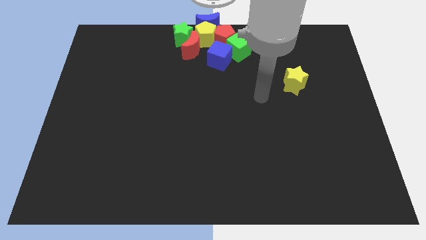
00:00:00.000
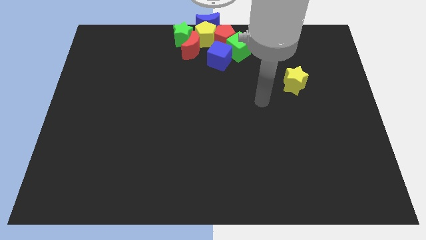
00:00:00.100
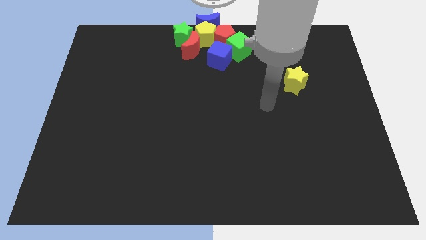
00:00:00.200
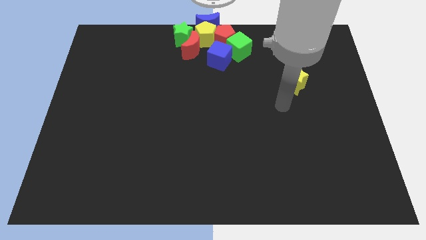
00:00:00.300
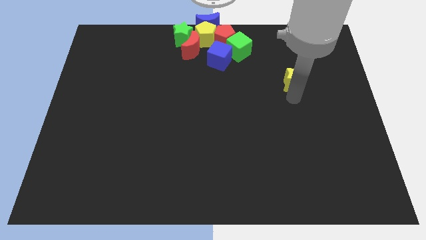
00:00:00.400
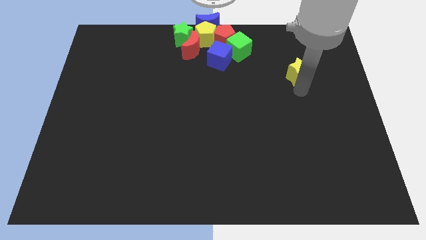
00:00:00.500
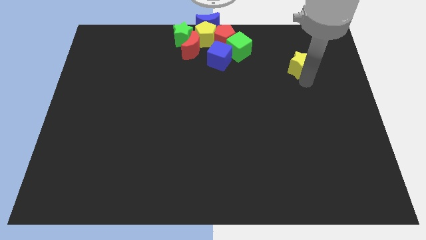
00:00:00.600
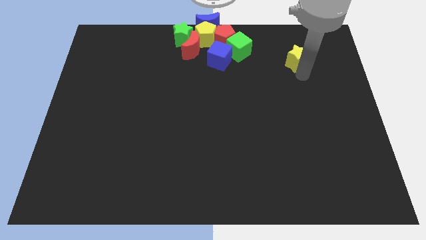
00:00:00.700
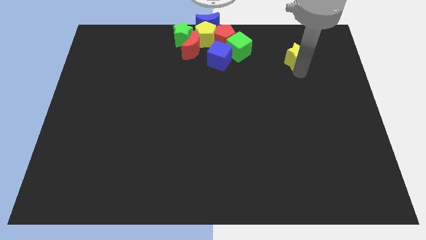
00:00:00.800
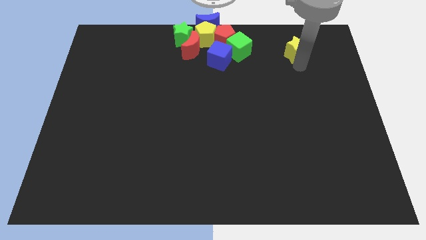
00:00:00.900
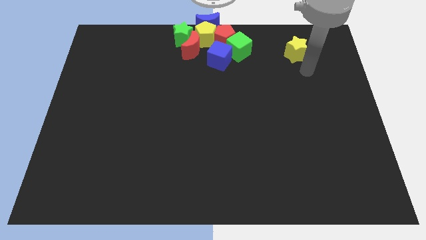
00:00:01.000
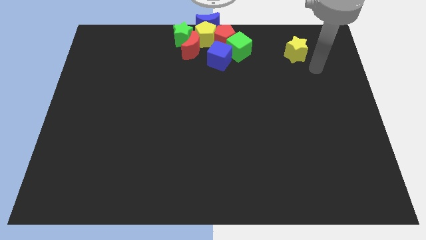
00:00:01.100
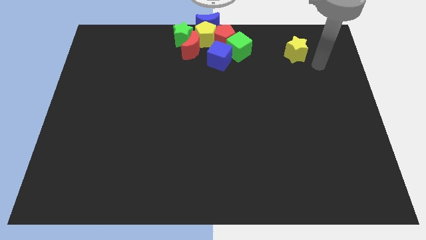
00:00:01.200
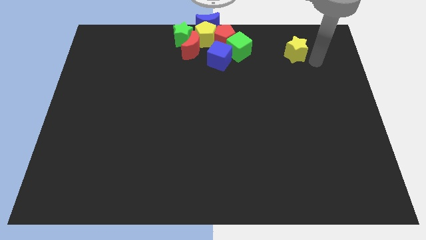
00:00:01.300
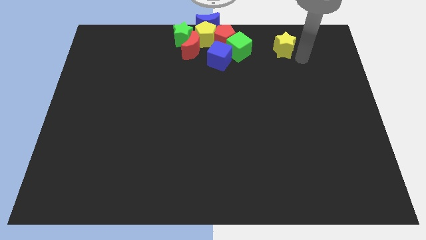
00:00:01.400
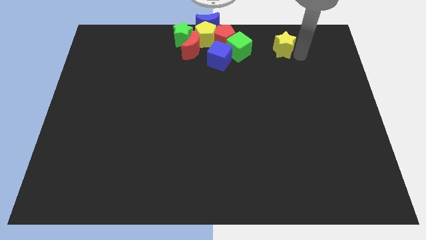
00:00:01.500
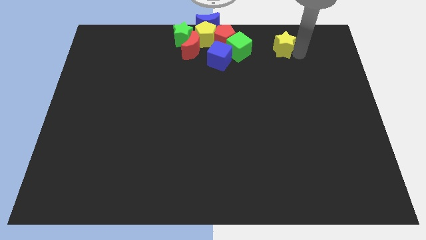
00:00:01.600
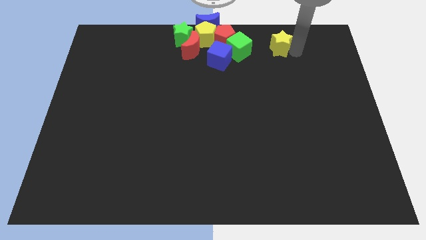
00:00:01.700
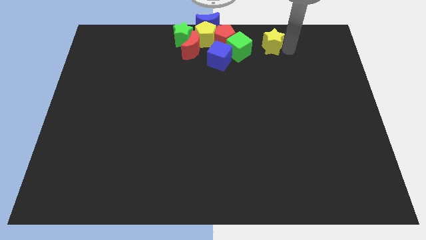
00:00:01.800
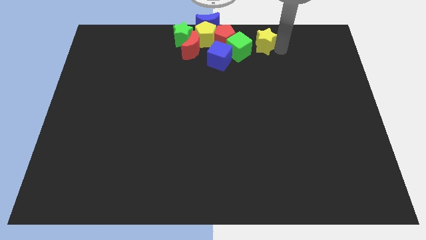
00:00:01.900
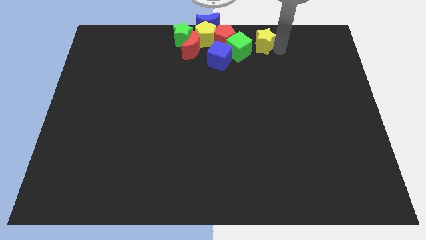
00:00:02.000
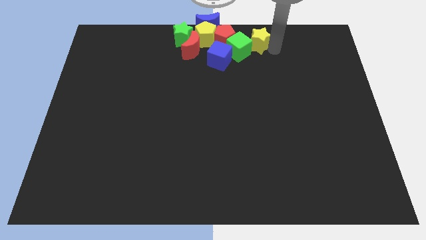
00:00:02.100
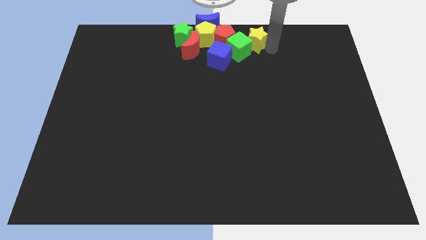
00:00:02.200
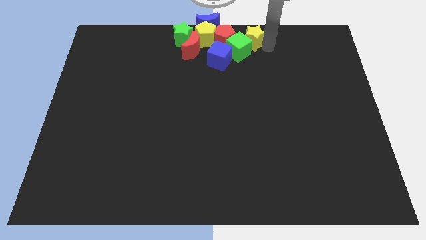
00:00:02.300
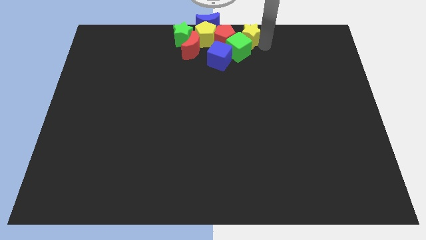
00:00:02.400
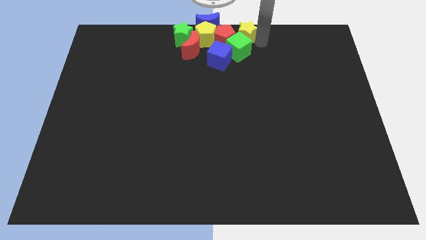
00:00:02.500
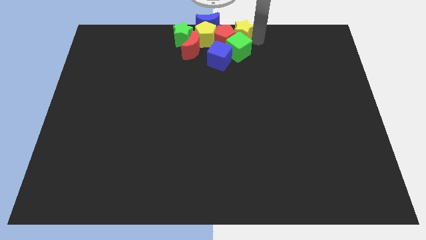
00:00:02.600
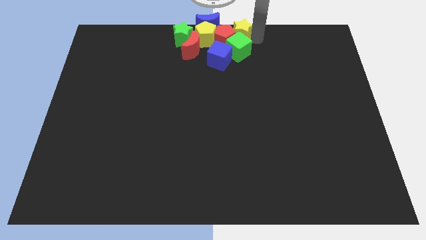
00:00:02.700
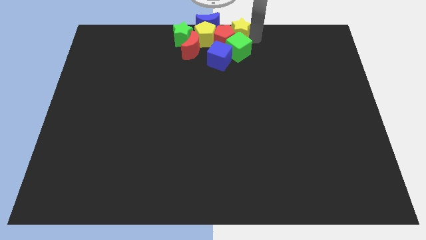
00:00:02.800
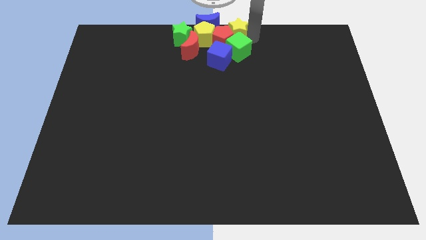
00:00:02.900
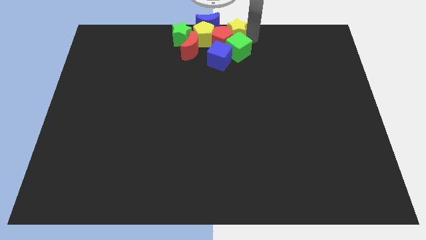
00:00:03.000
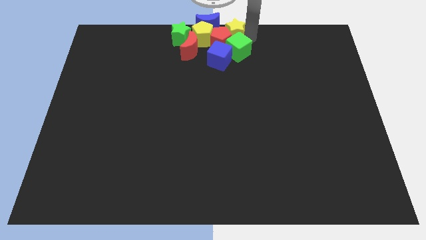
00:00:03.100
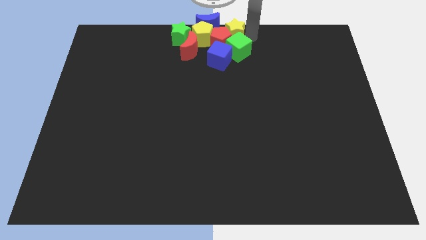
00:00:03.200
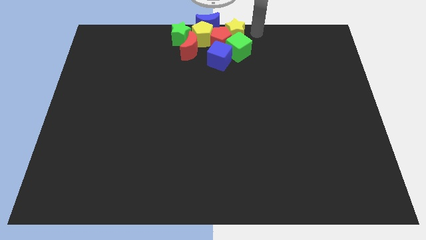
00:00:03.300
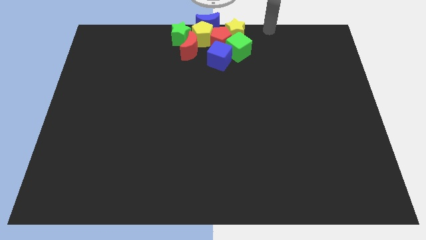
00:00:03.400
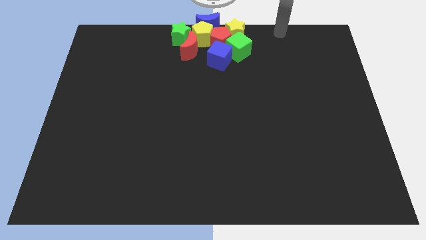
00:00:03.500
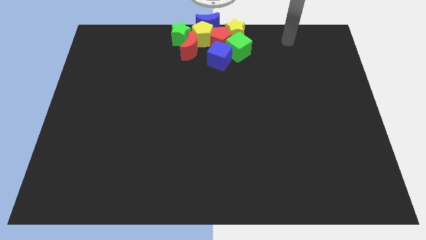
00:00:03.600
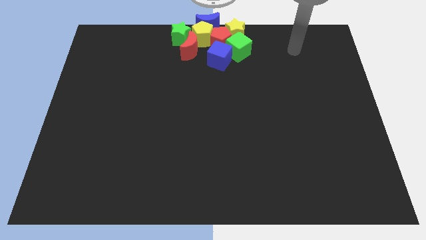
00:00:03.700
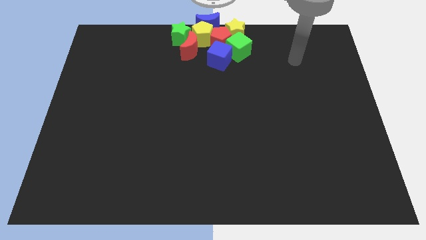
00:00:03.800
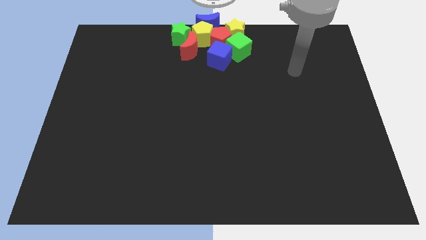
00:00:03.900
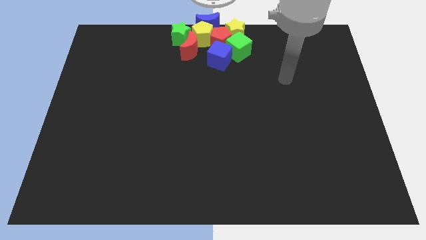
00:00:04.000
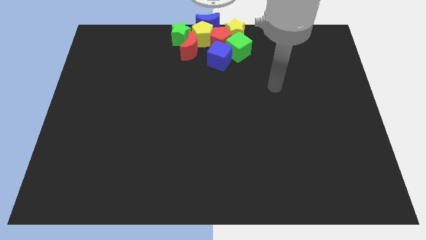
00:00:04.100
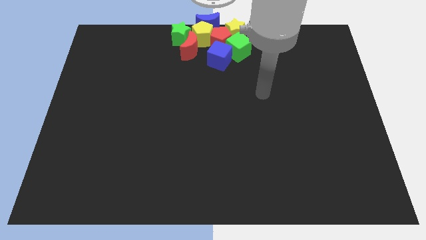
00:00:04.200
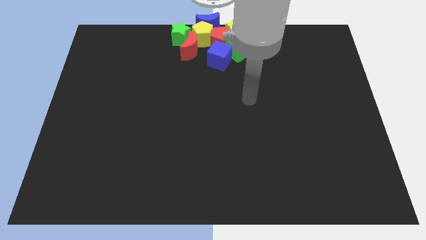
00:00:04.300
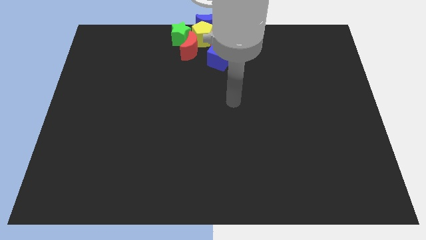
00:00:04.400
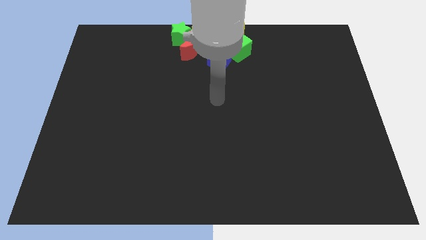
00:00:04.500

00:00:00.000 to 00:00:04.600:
move the yellow star into the group of blocks

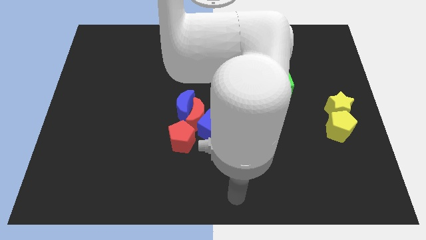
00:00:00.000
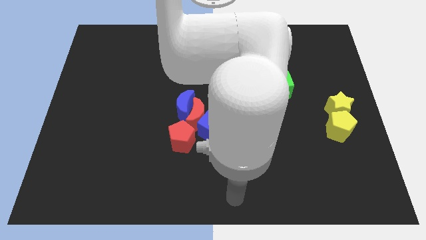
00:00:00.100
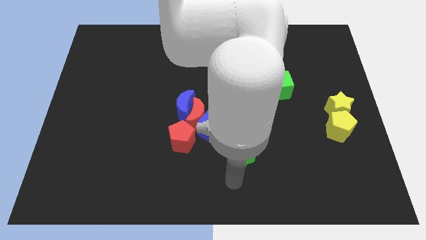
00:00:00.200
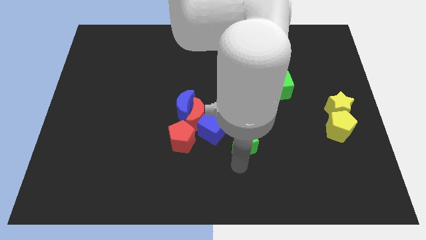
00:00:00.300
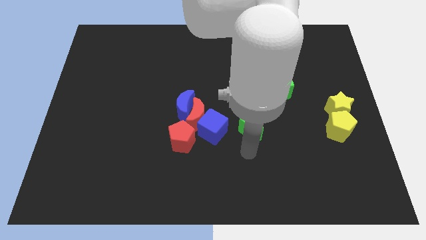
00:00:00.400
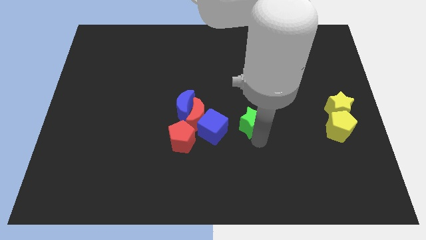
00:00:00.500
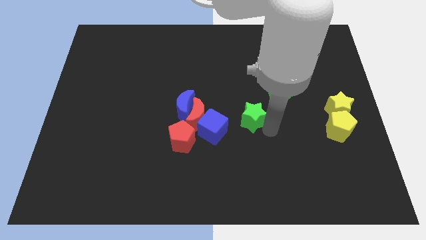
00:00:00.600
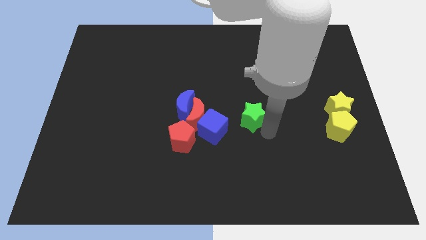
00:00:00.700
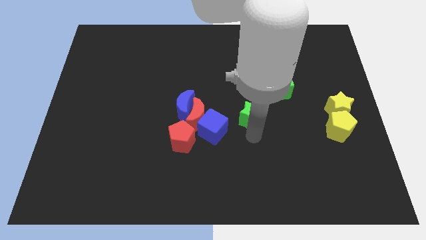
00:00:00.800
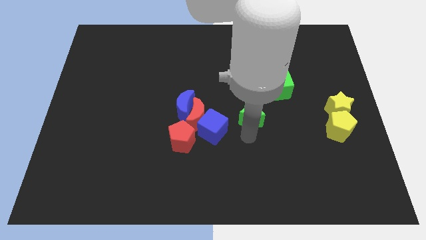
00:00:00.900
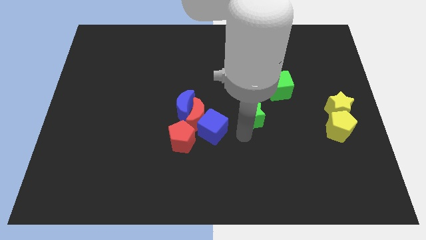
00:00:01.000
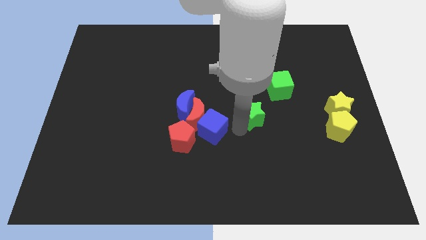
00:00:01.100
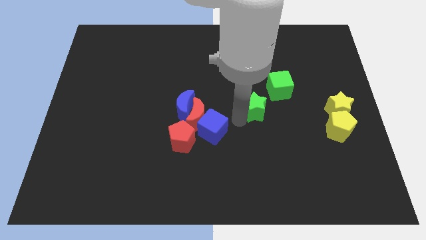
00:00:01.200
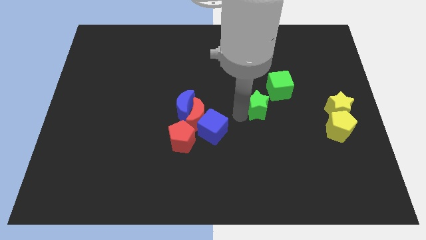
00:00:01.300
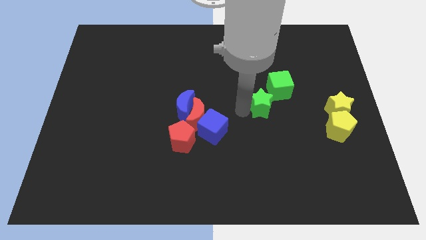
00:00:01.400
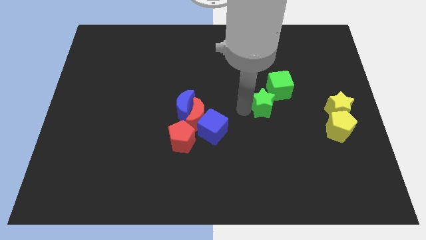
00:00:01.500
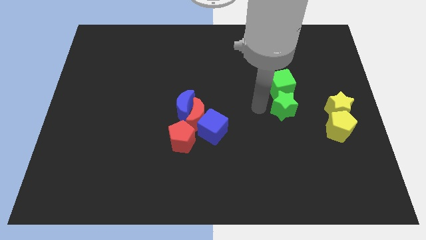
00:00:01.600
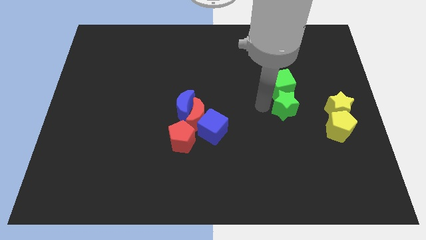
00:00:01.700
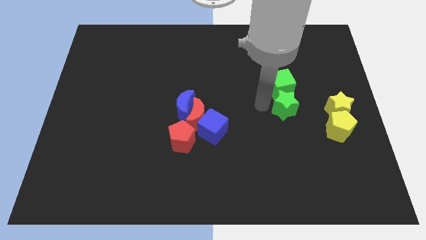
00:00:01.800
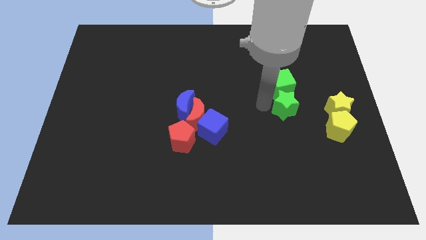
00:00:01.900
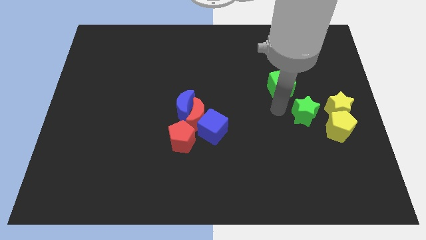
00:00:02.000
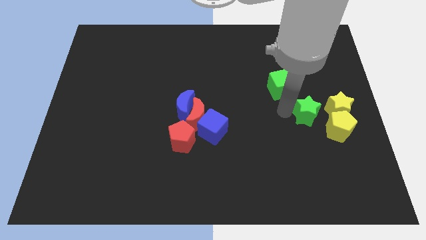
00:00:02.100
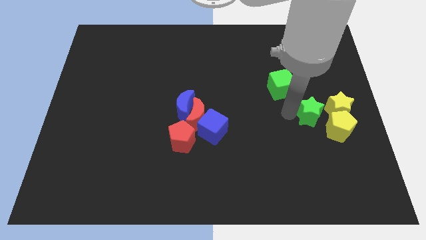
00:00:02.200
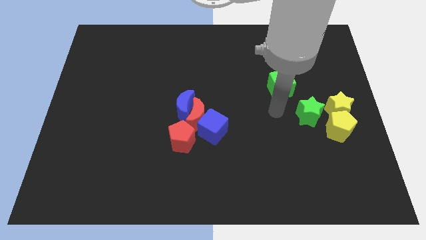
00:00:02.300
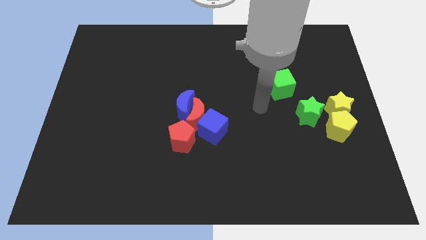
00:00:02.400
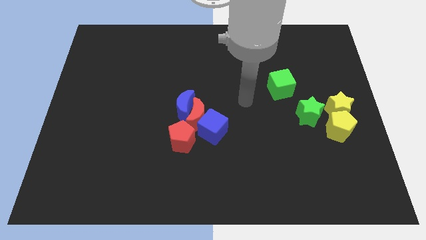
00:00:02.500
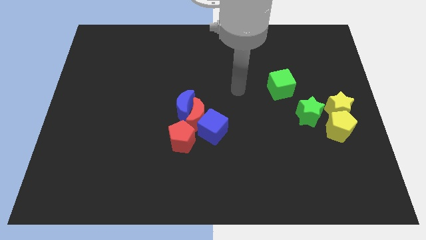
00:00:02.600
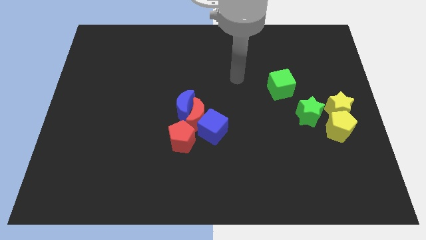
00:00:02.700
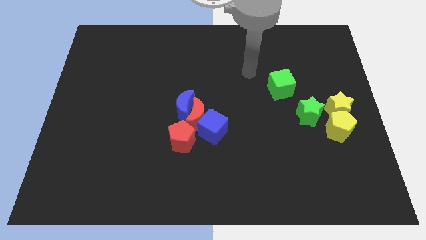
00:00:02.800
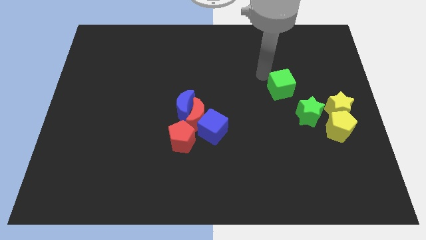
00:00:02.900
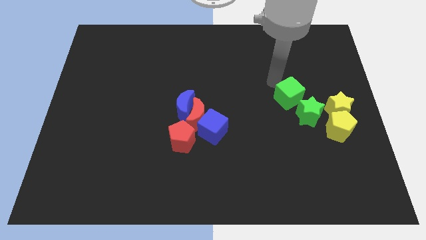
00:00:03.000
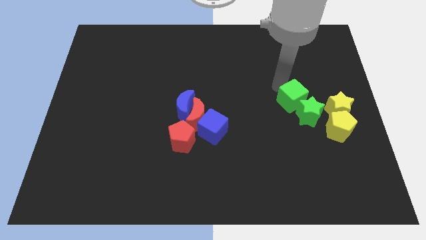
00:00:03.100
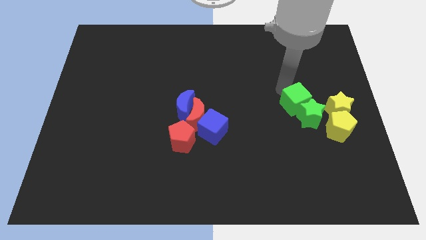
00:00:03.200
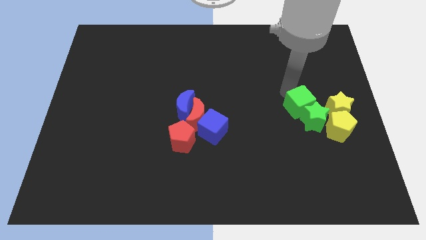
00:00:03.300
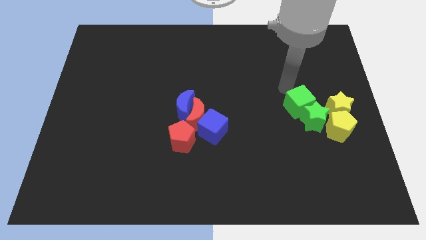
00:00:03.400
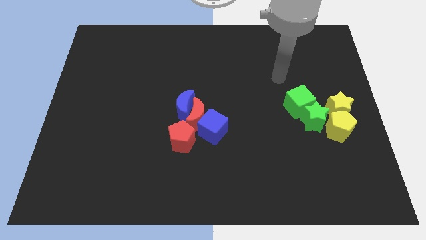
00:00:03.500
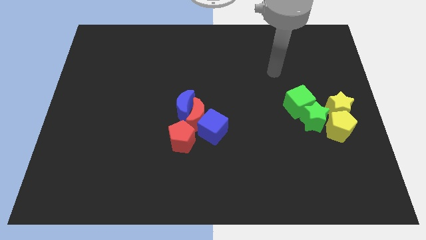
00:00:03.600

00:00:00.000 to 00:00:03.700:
push green cube into the green star

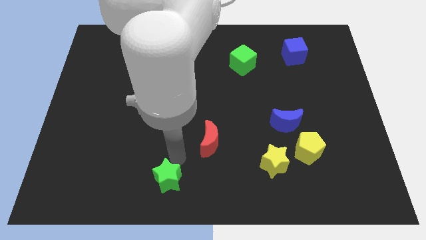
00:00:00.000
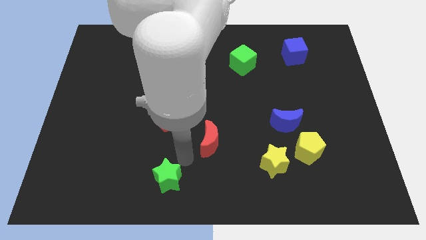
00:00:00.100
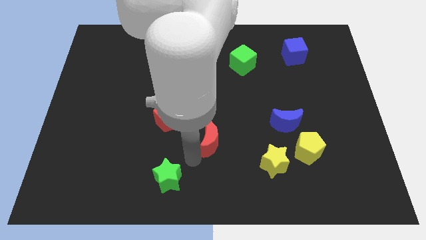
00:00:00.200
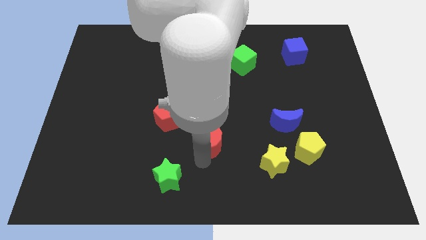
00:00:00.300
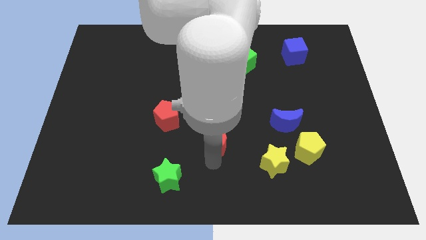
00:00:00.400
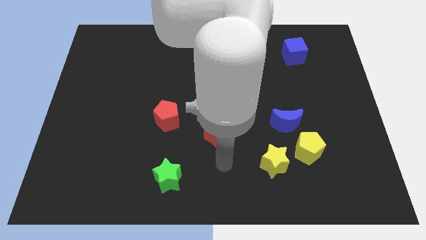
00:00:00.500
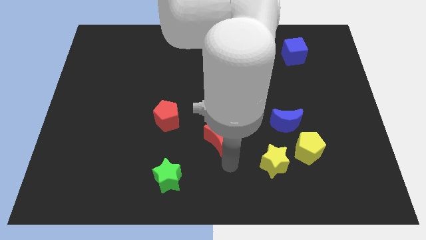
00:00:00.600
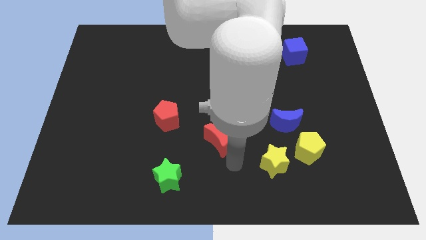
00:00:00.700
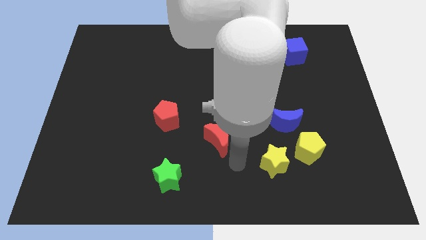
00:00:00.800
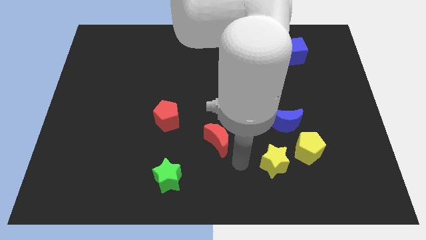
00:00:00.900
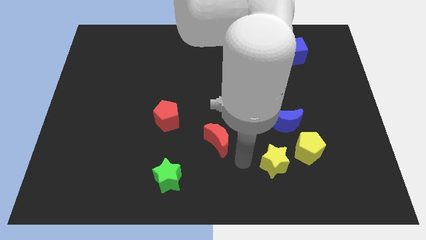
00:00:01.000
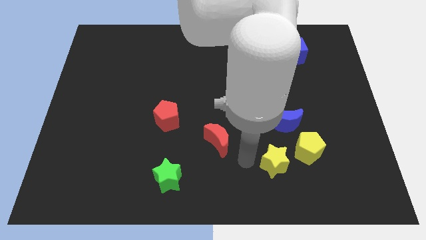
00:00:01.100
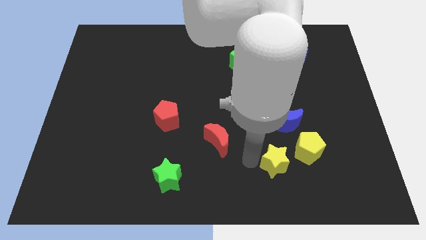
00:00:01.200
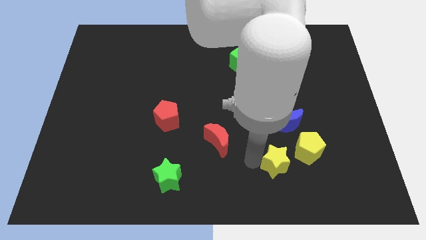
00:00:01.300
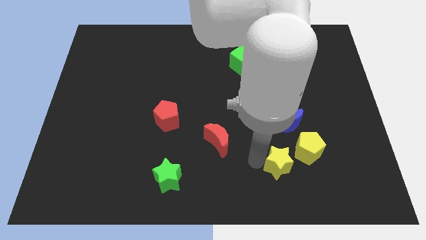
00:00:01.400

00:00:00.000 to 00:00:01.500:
move your arm to the left of yellow star
